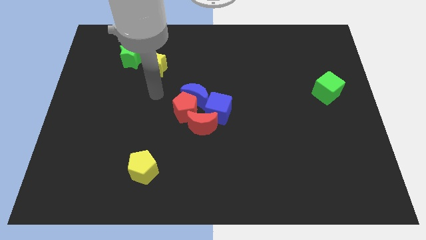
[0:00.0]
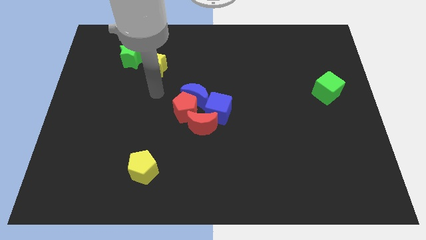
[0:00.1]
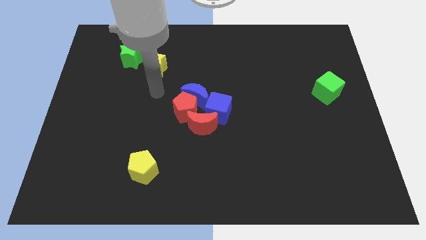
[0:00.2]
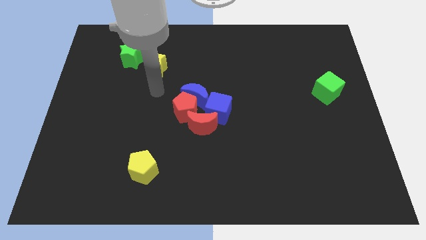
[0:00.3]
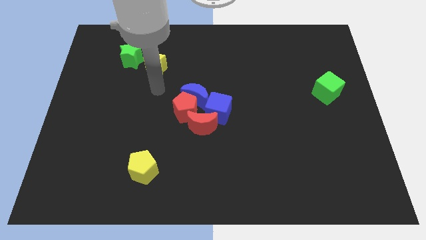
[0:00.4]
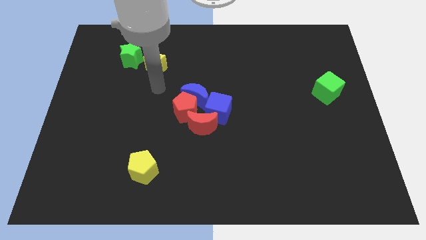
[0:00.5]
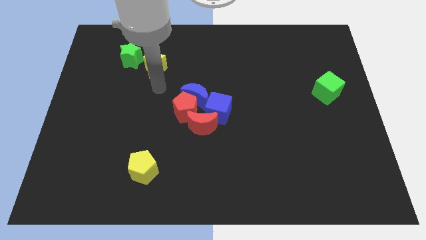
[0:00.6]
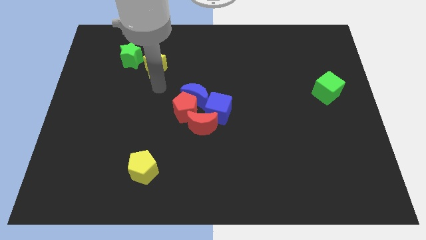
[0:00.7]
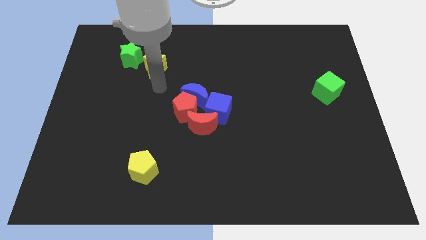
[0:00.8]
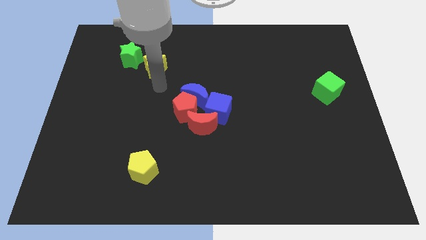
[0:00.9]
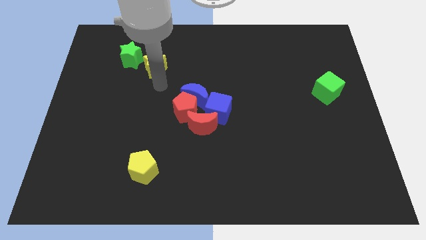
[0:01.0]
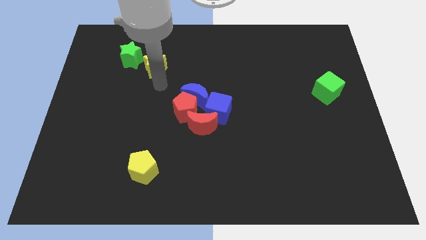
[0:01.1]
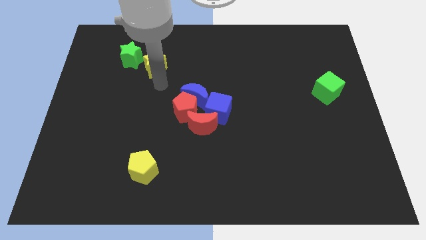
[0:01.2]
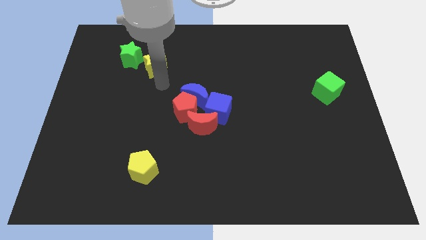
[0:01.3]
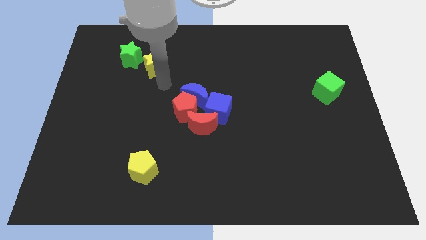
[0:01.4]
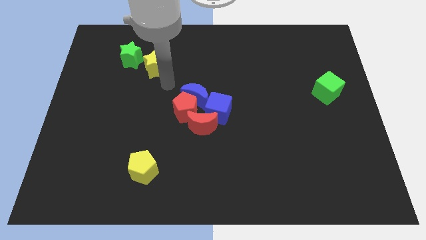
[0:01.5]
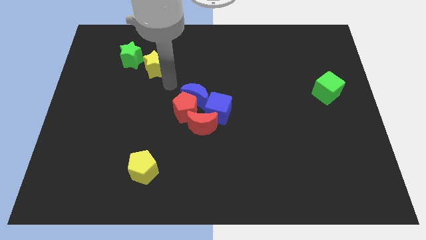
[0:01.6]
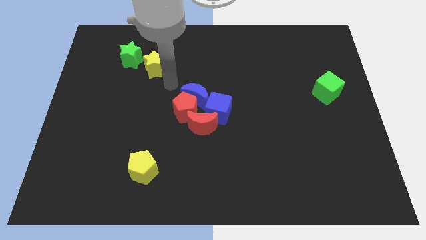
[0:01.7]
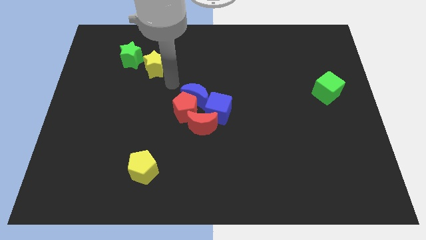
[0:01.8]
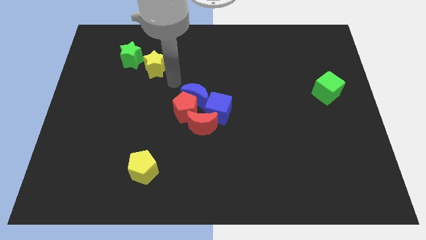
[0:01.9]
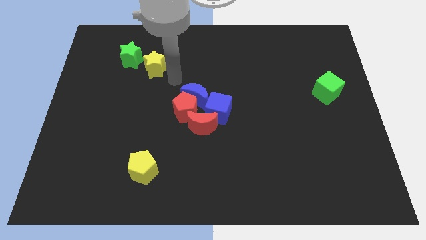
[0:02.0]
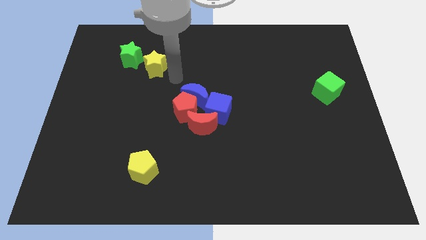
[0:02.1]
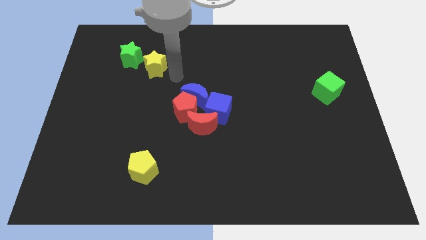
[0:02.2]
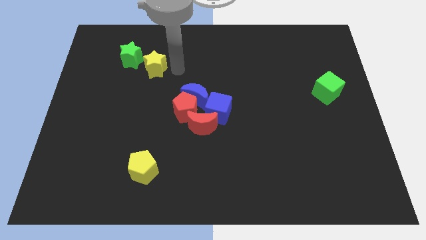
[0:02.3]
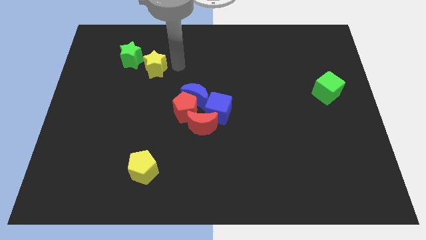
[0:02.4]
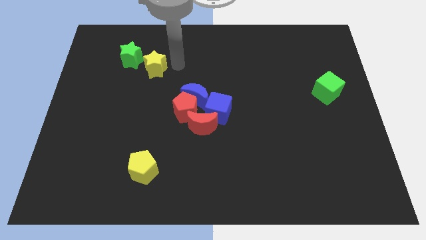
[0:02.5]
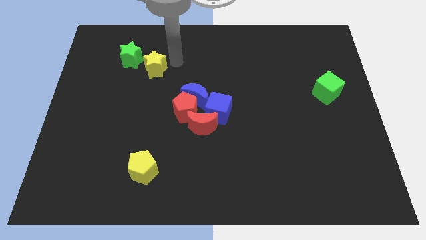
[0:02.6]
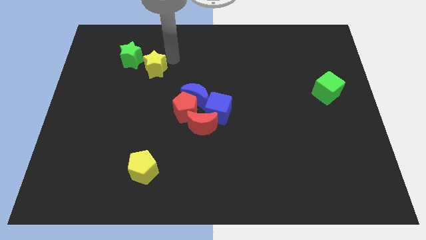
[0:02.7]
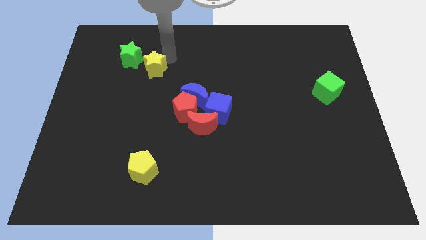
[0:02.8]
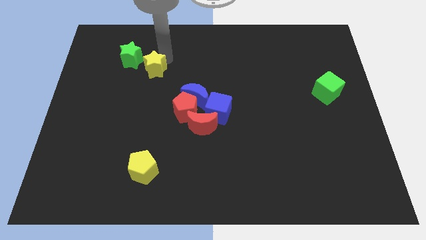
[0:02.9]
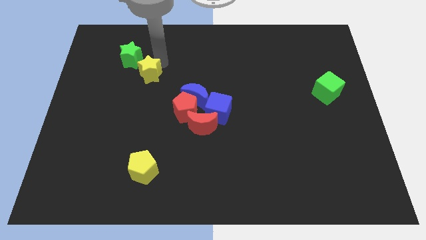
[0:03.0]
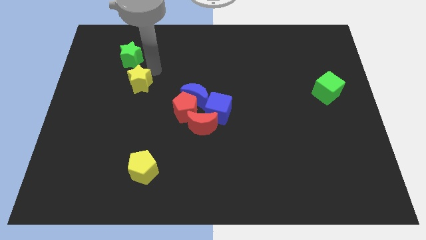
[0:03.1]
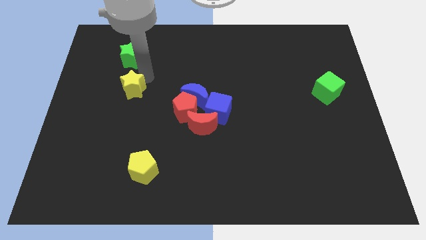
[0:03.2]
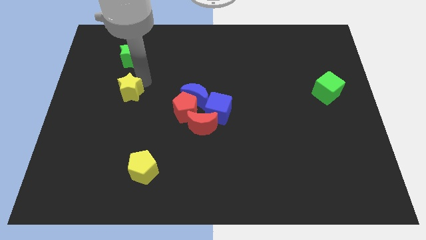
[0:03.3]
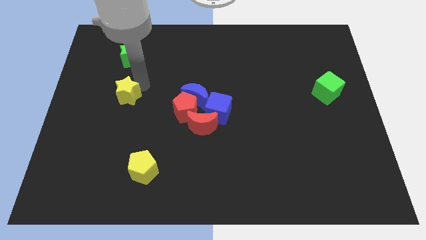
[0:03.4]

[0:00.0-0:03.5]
push the yellow star between the green star and yellow pentagon

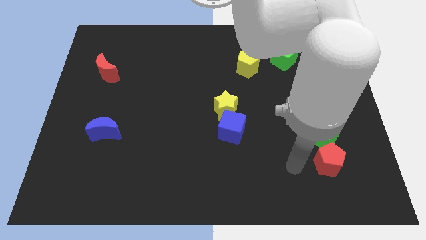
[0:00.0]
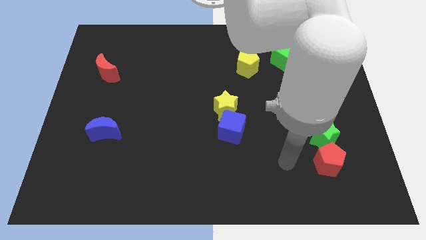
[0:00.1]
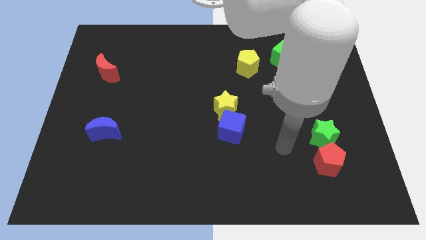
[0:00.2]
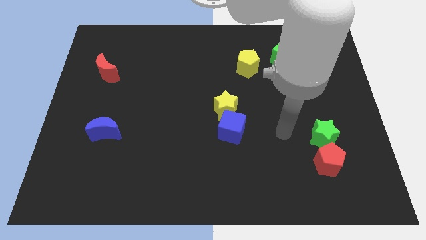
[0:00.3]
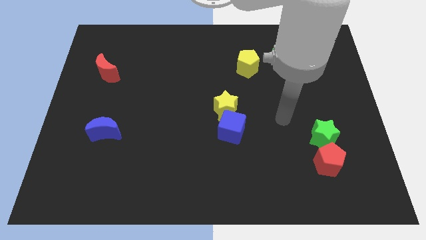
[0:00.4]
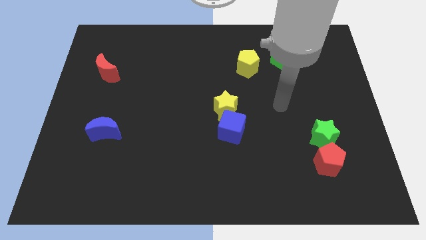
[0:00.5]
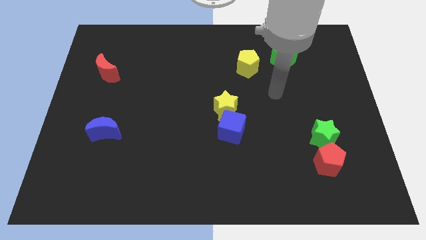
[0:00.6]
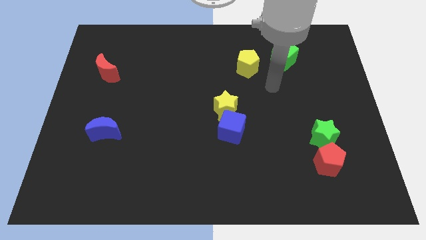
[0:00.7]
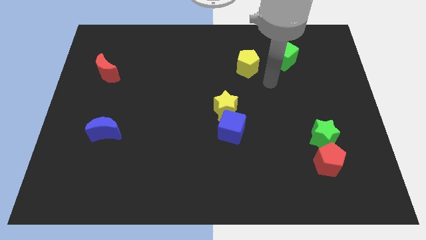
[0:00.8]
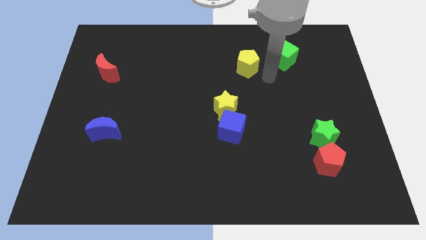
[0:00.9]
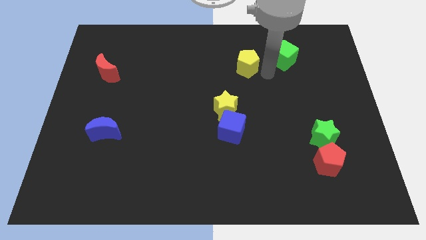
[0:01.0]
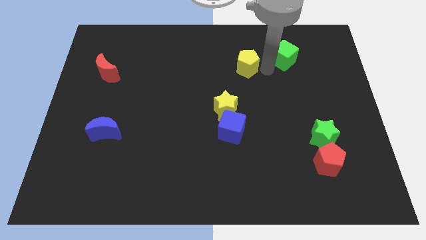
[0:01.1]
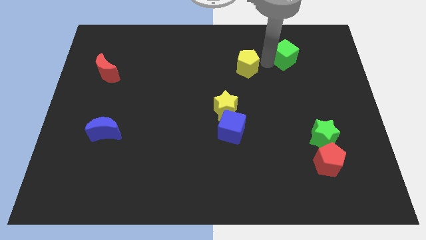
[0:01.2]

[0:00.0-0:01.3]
tap the green cube

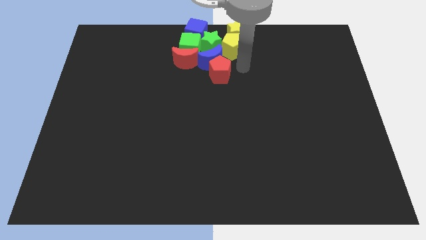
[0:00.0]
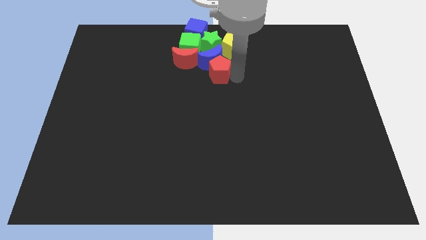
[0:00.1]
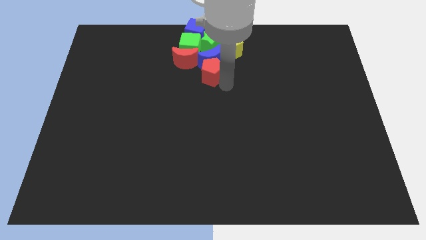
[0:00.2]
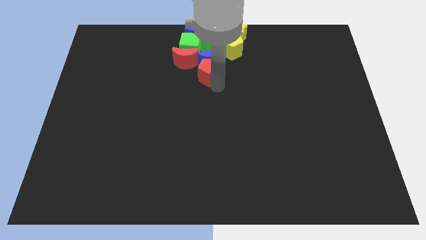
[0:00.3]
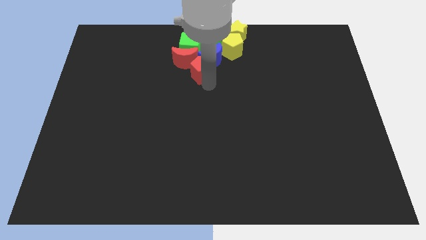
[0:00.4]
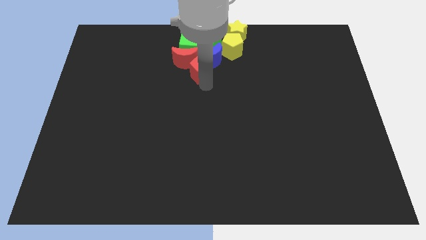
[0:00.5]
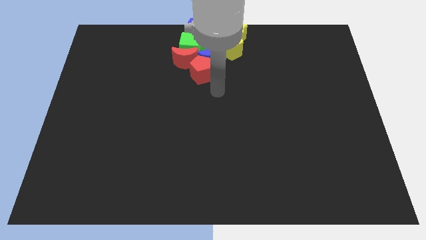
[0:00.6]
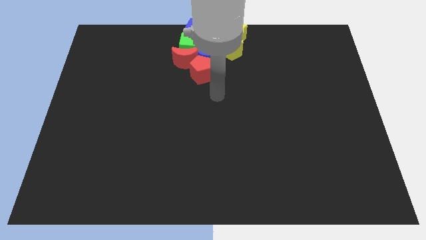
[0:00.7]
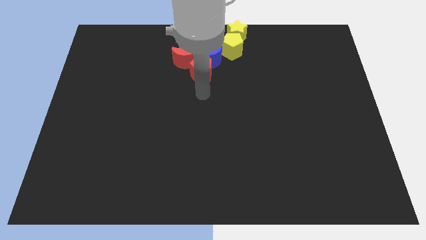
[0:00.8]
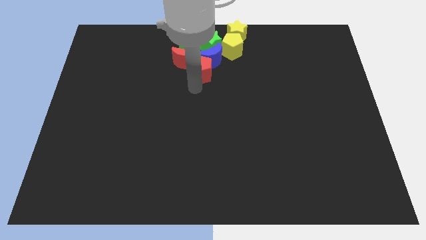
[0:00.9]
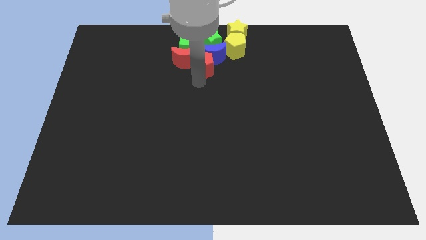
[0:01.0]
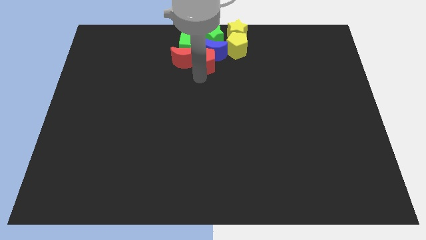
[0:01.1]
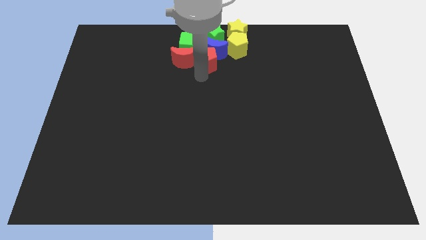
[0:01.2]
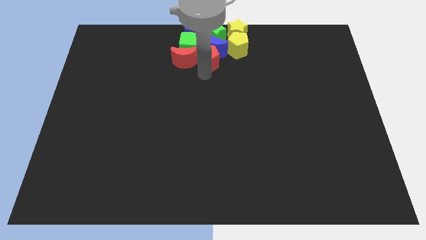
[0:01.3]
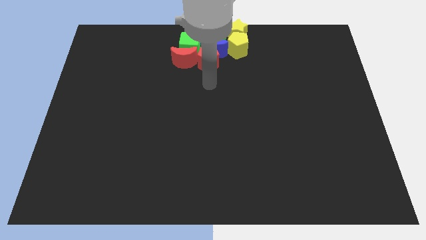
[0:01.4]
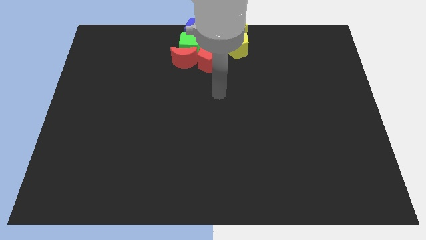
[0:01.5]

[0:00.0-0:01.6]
push the red pentagon to the right of the red crescent

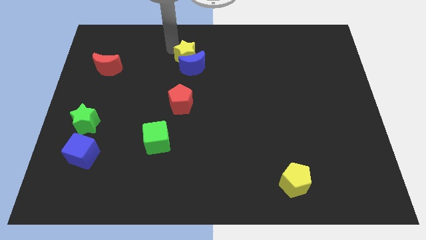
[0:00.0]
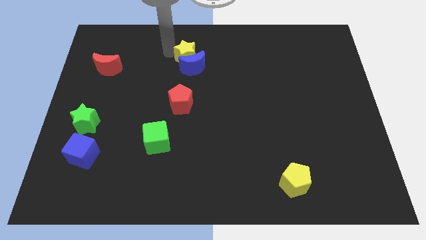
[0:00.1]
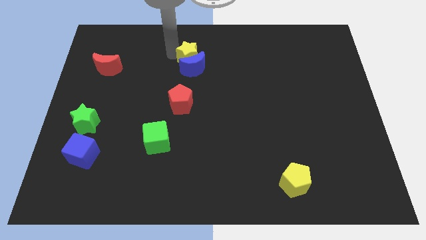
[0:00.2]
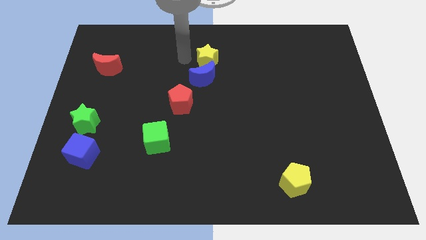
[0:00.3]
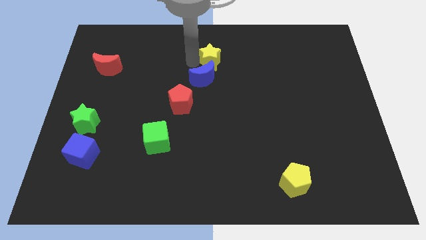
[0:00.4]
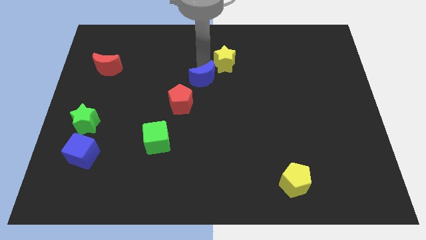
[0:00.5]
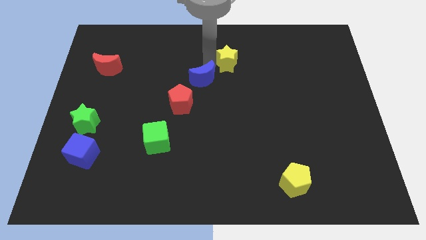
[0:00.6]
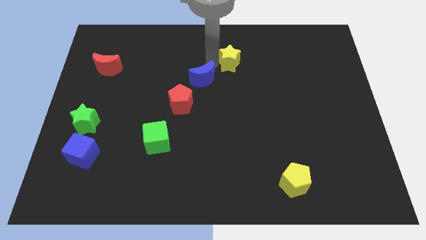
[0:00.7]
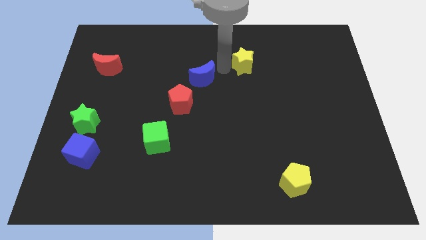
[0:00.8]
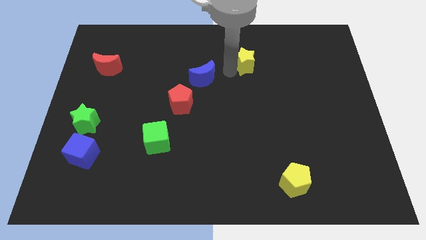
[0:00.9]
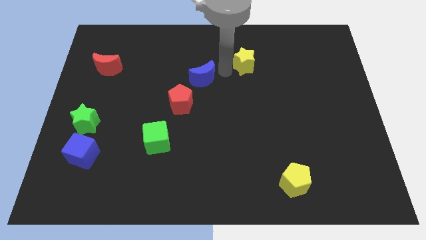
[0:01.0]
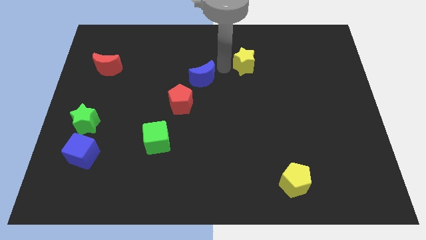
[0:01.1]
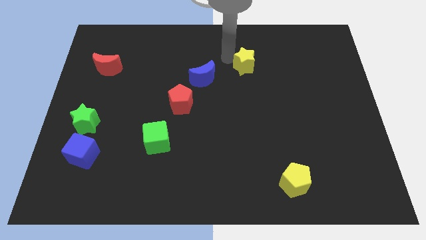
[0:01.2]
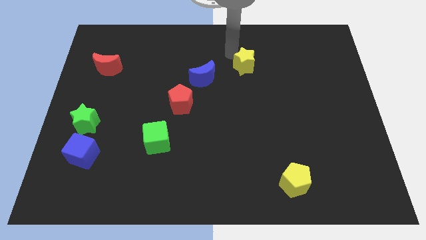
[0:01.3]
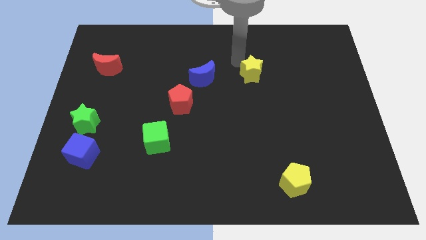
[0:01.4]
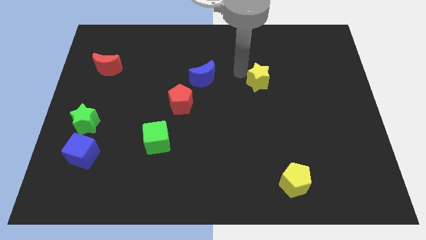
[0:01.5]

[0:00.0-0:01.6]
place yellow star to the right of the blue moon

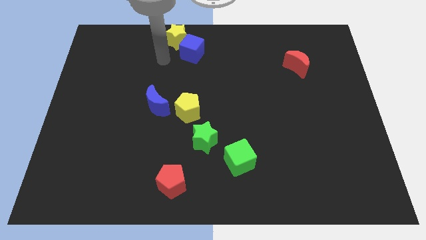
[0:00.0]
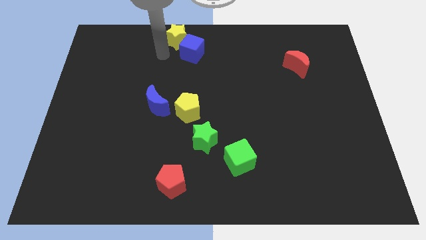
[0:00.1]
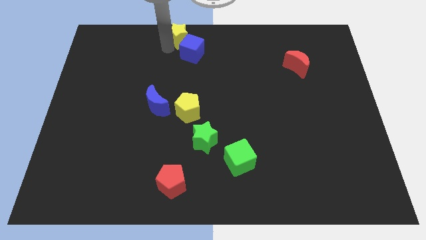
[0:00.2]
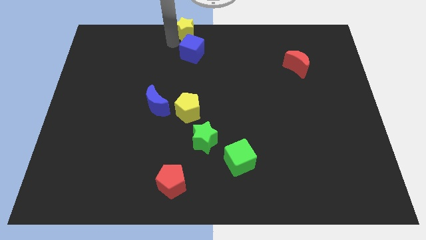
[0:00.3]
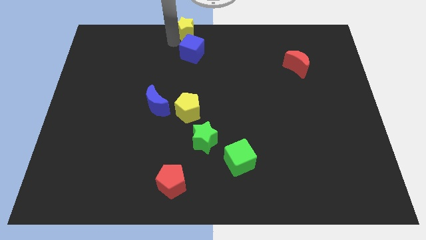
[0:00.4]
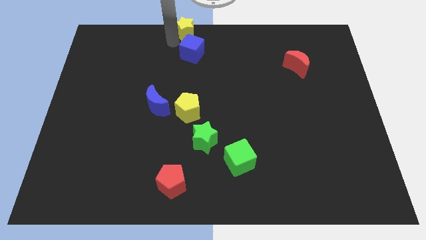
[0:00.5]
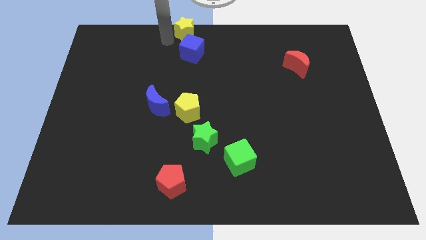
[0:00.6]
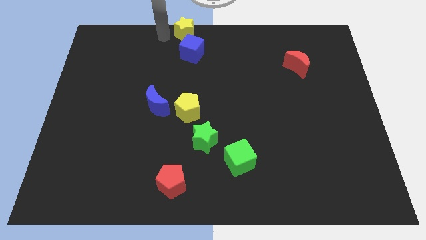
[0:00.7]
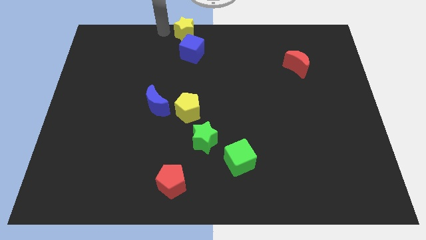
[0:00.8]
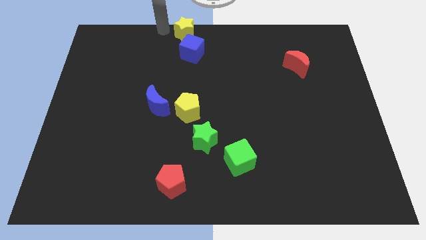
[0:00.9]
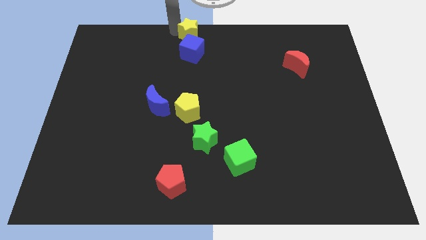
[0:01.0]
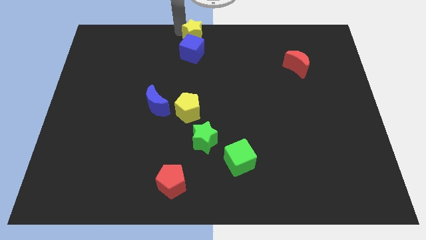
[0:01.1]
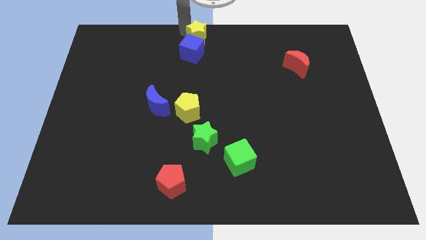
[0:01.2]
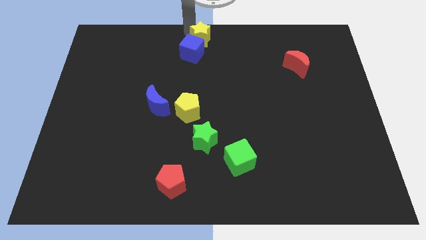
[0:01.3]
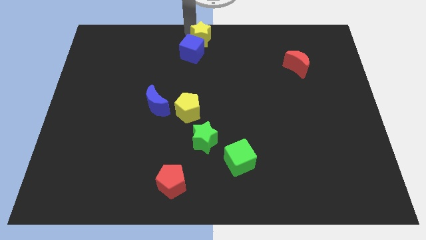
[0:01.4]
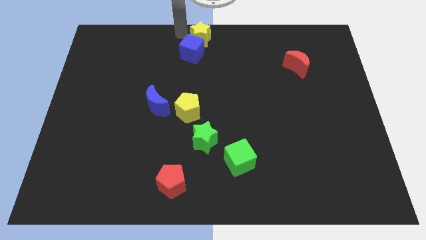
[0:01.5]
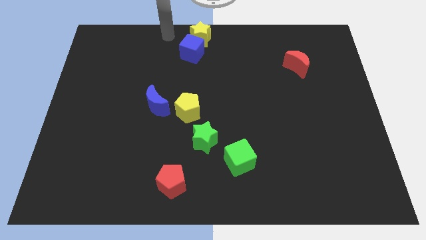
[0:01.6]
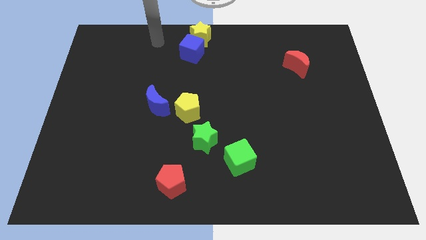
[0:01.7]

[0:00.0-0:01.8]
push the yellow star at the top center of the board
